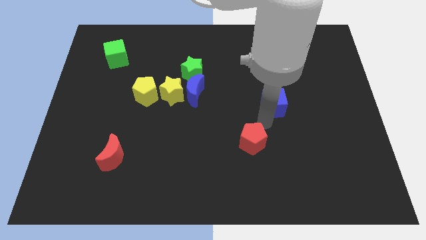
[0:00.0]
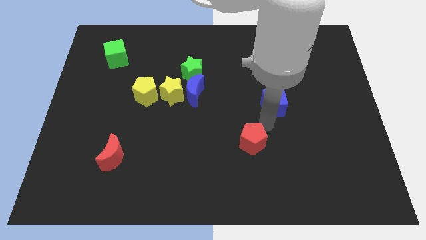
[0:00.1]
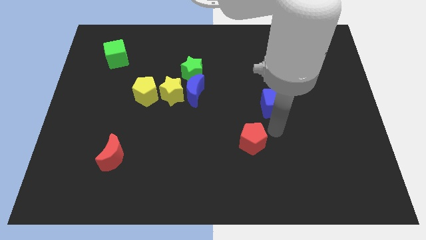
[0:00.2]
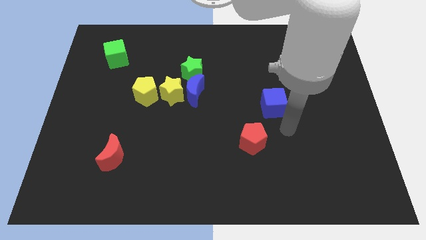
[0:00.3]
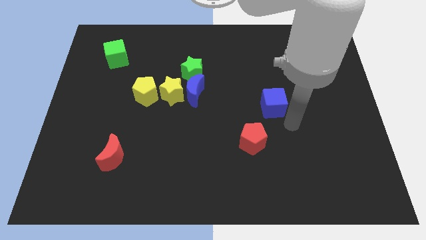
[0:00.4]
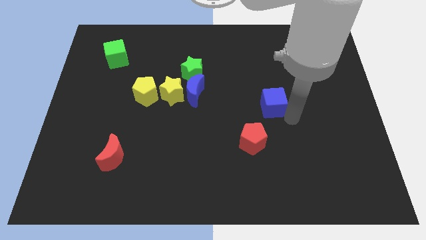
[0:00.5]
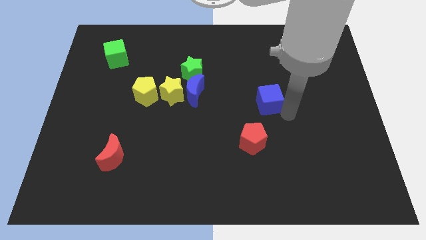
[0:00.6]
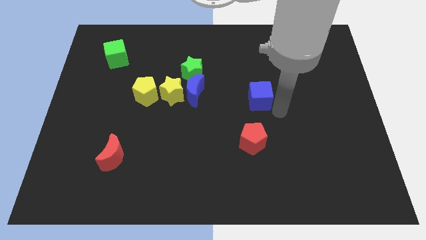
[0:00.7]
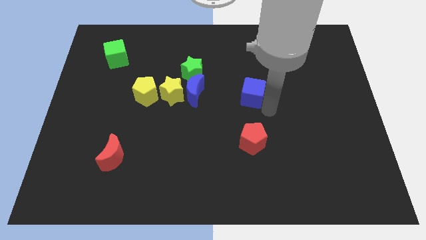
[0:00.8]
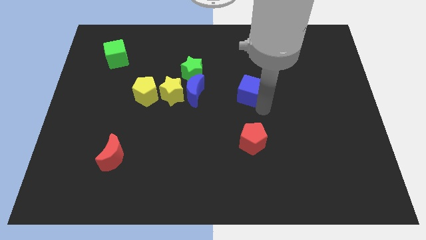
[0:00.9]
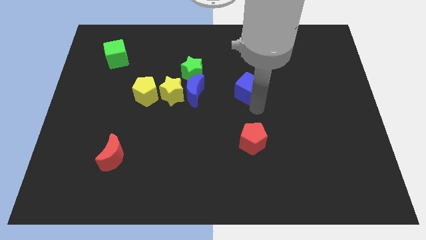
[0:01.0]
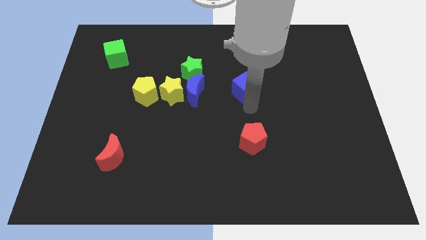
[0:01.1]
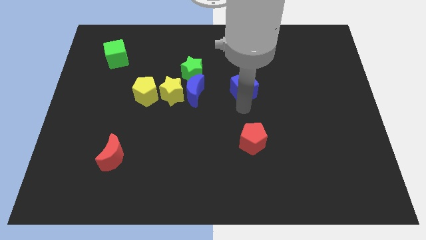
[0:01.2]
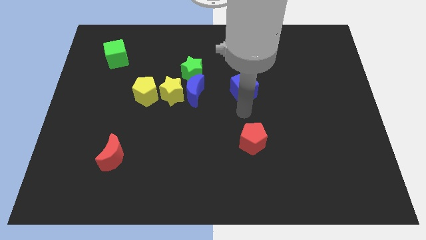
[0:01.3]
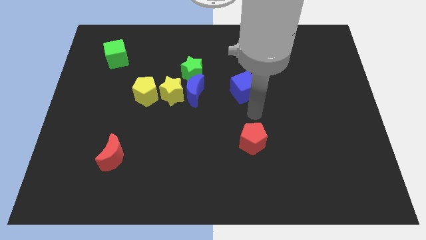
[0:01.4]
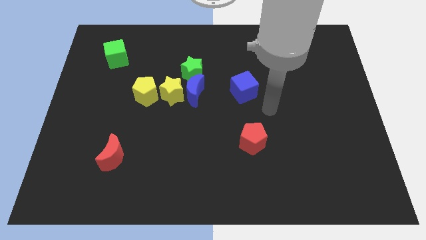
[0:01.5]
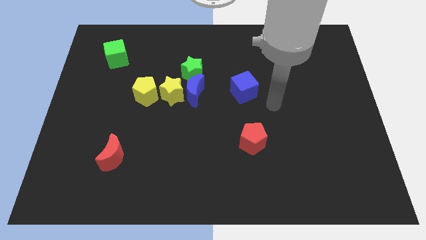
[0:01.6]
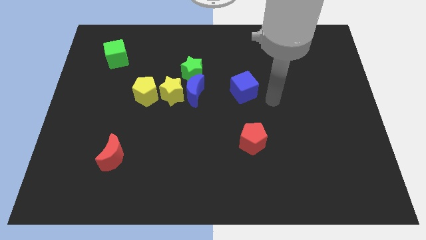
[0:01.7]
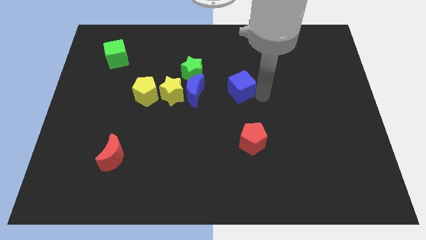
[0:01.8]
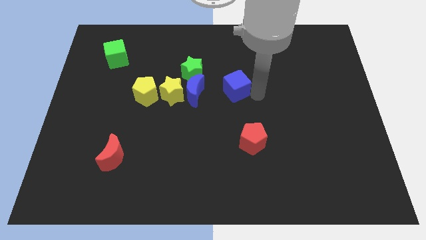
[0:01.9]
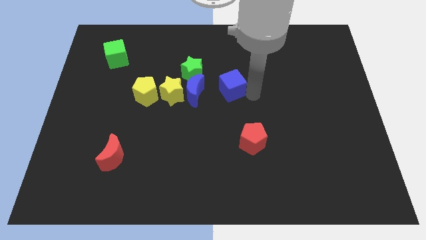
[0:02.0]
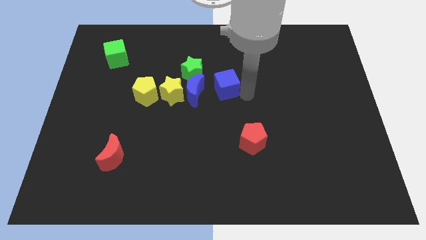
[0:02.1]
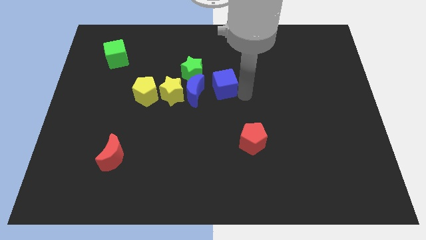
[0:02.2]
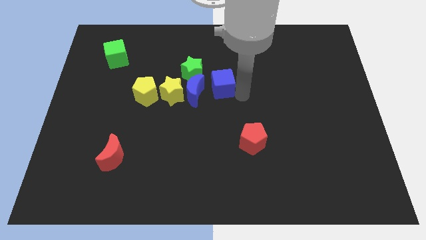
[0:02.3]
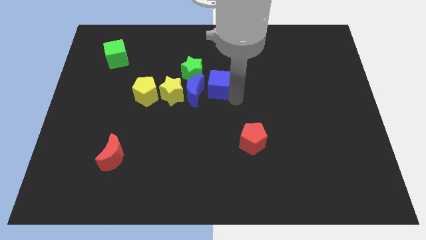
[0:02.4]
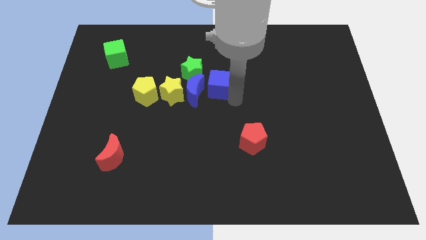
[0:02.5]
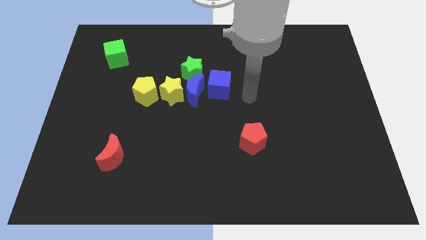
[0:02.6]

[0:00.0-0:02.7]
place blue cube near blue crescent

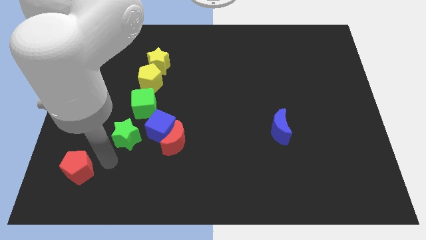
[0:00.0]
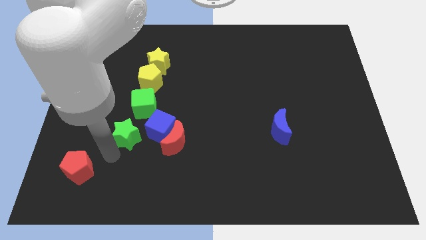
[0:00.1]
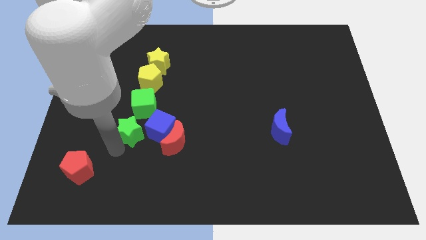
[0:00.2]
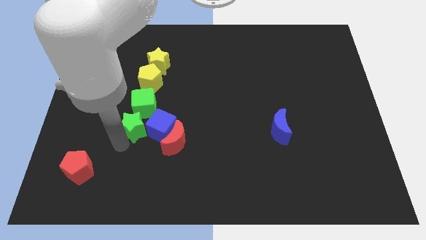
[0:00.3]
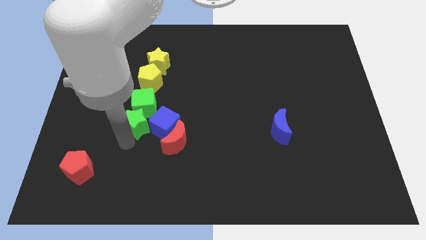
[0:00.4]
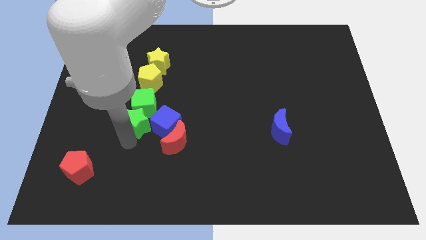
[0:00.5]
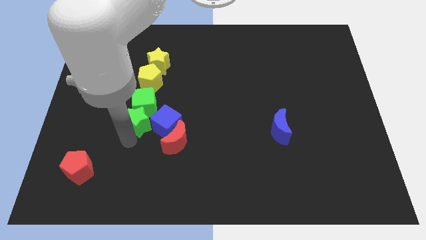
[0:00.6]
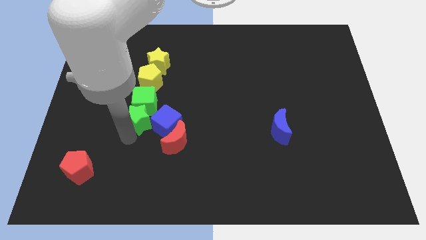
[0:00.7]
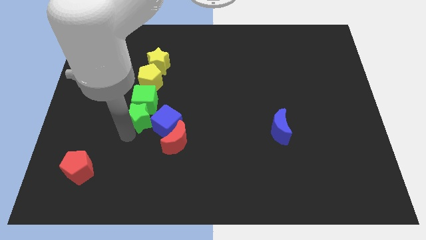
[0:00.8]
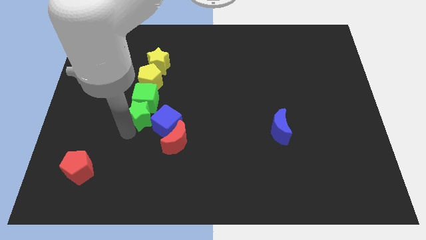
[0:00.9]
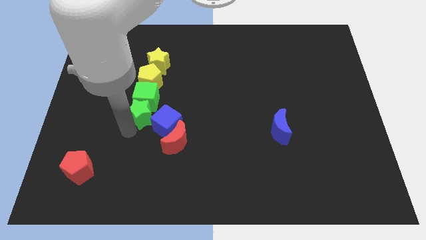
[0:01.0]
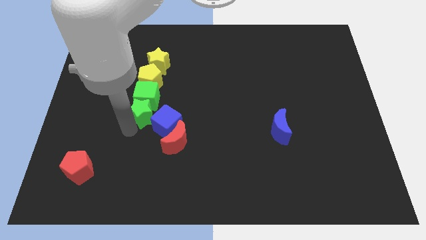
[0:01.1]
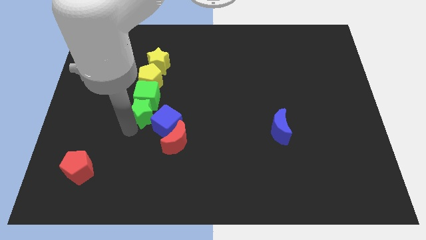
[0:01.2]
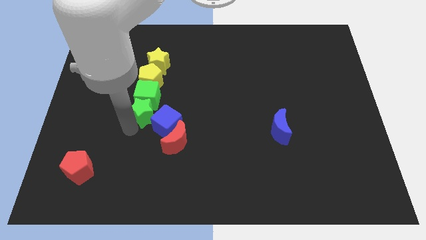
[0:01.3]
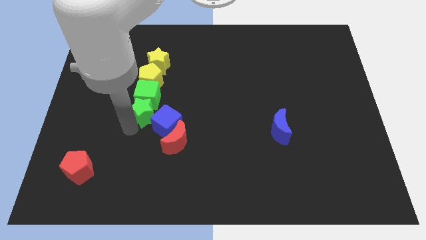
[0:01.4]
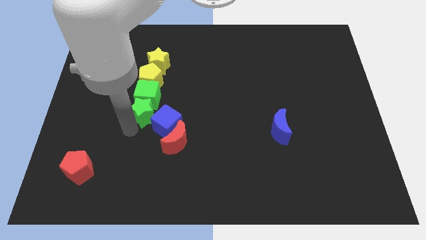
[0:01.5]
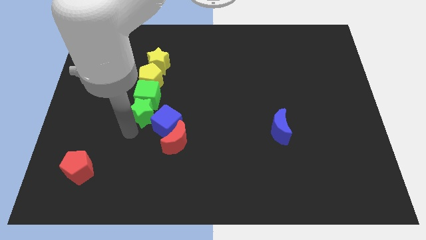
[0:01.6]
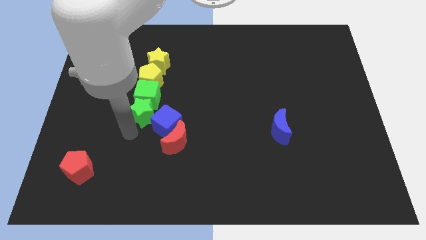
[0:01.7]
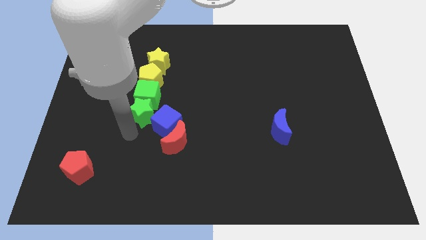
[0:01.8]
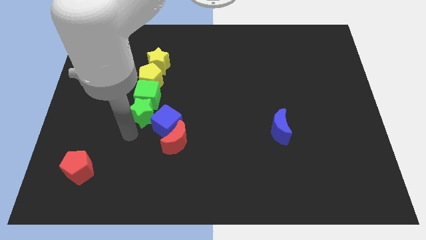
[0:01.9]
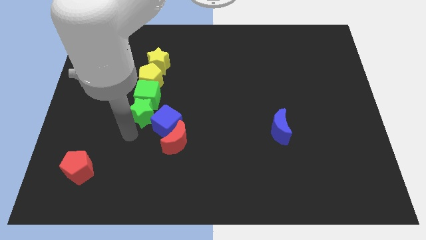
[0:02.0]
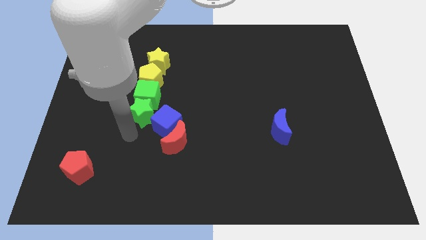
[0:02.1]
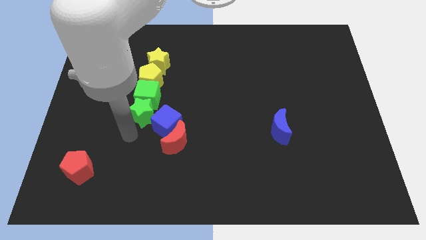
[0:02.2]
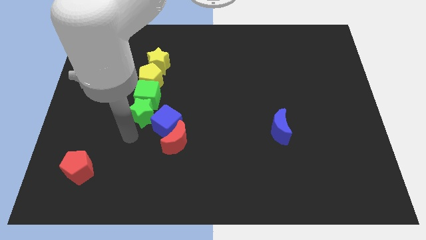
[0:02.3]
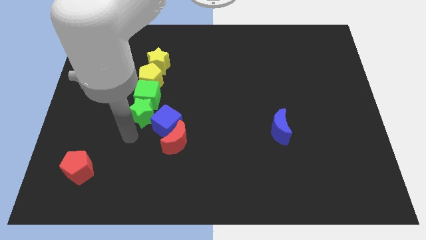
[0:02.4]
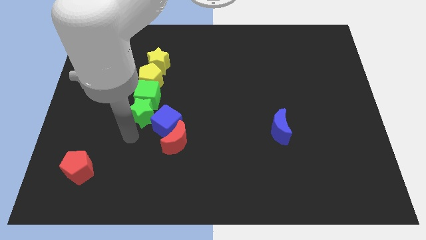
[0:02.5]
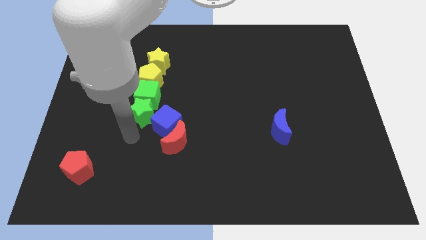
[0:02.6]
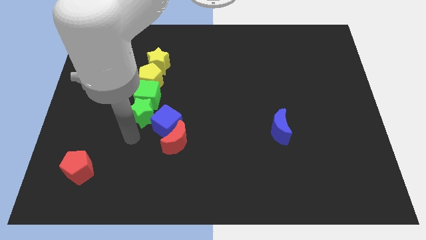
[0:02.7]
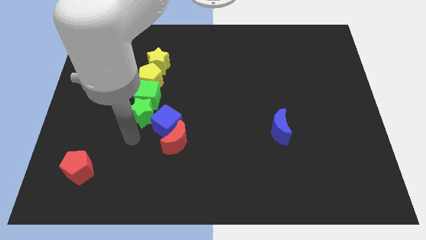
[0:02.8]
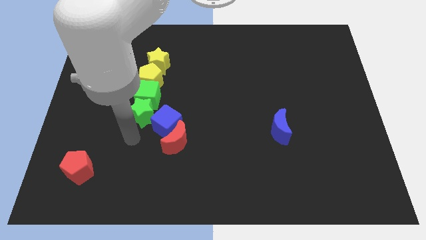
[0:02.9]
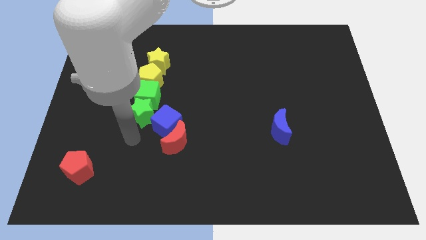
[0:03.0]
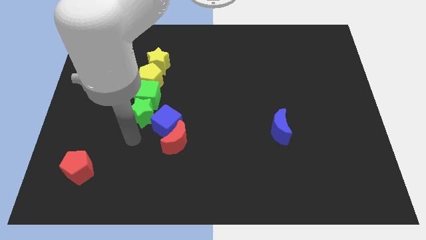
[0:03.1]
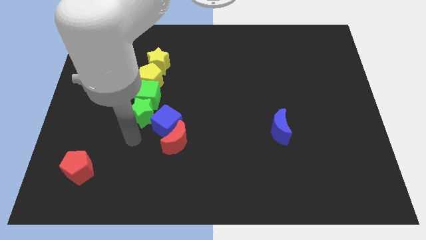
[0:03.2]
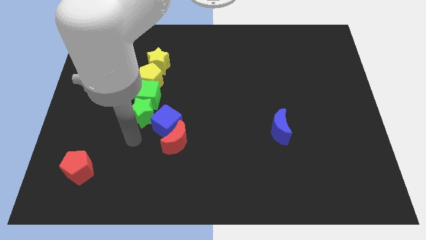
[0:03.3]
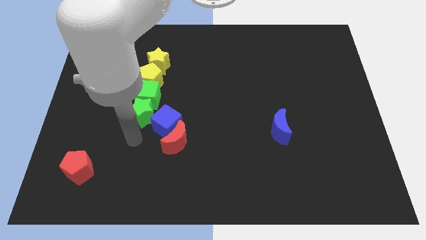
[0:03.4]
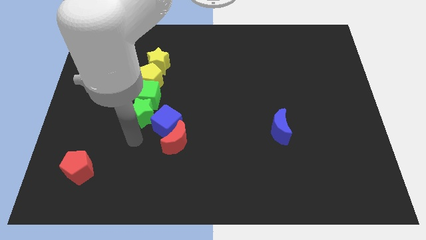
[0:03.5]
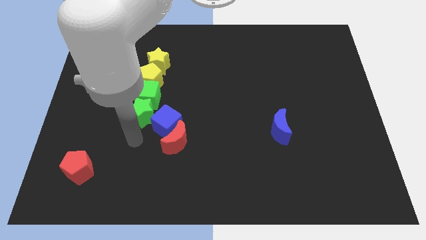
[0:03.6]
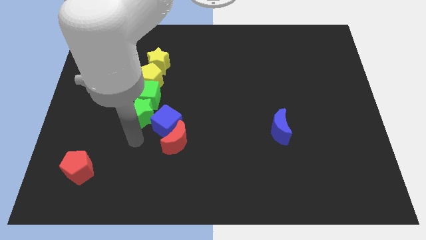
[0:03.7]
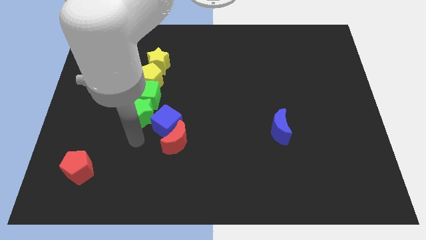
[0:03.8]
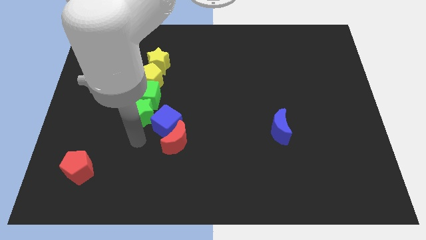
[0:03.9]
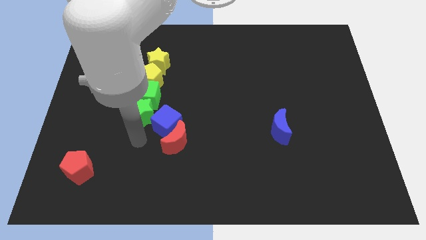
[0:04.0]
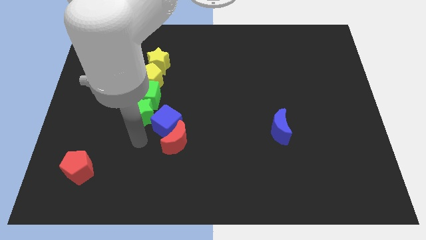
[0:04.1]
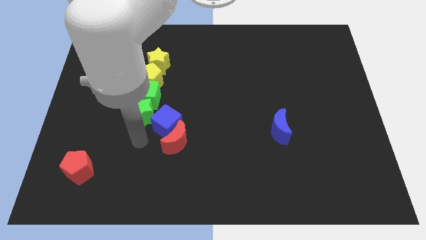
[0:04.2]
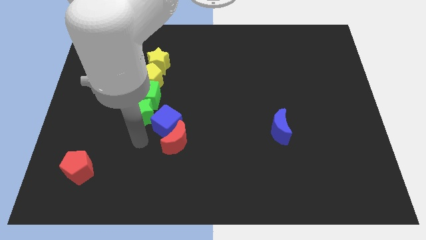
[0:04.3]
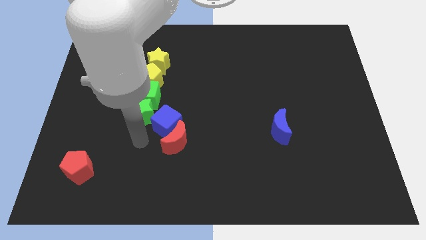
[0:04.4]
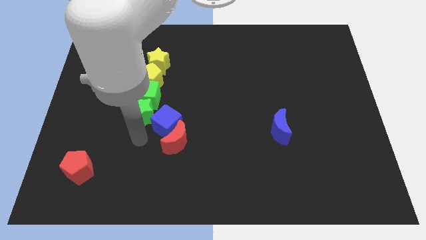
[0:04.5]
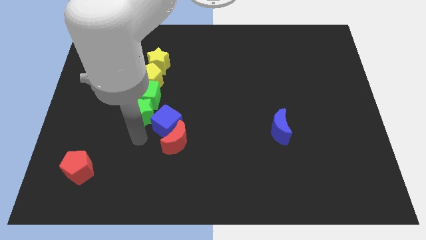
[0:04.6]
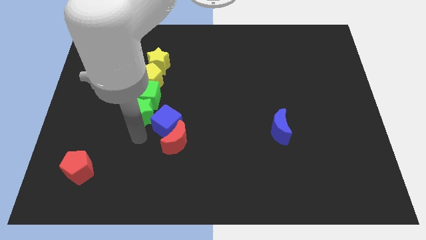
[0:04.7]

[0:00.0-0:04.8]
place the green star at the vertical bottom of the green cube

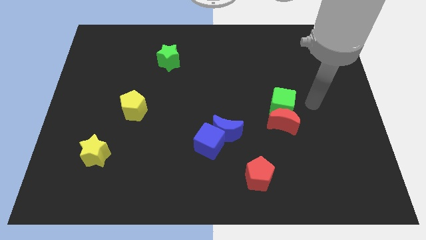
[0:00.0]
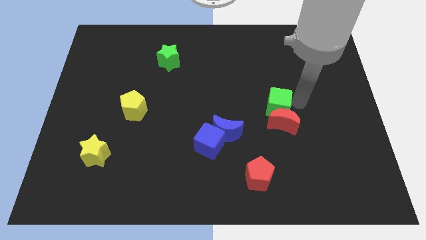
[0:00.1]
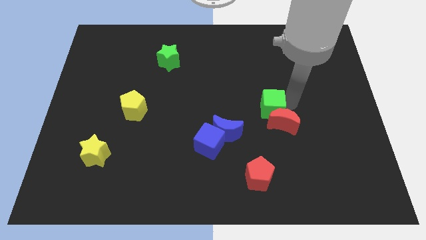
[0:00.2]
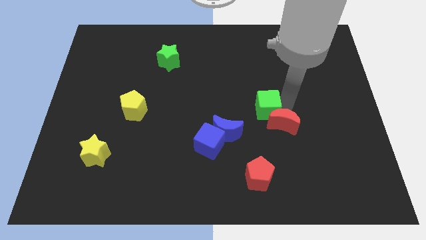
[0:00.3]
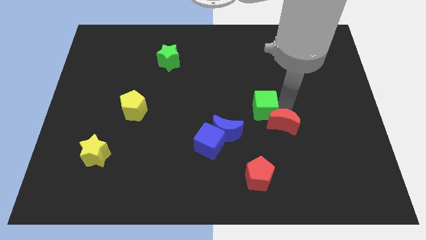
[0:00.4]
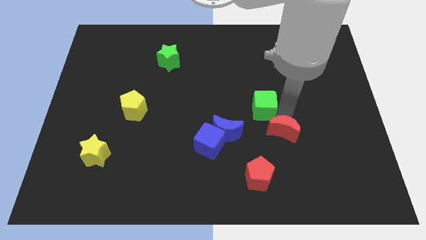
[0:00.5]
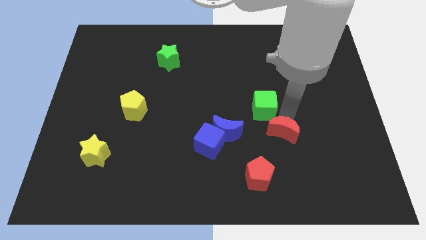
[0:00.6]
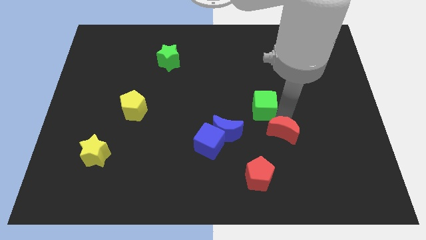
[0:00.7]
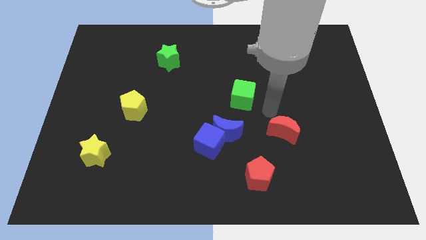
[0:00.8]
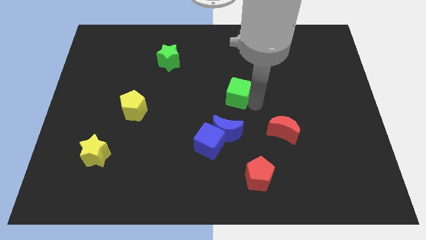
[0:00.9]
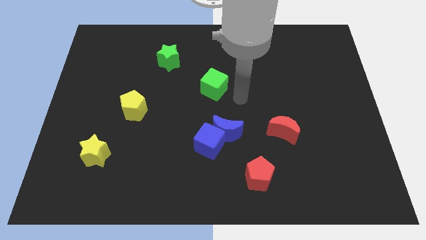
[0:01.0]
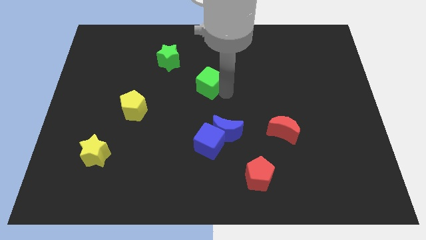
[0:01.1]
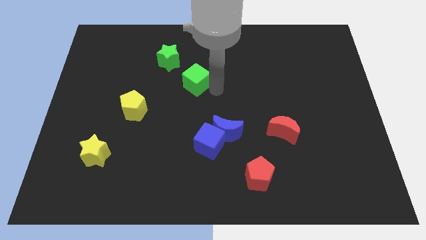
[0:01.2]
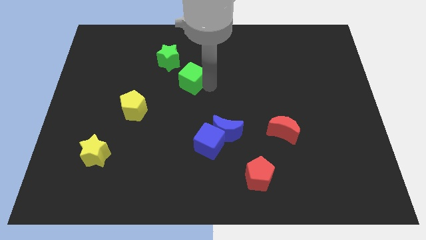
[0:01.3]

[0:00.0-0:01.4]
move green cube diagonally below the green star
